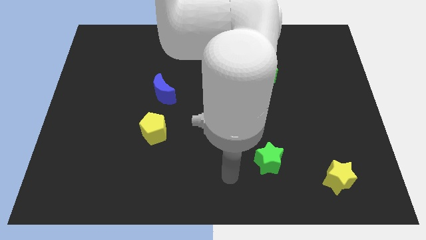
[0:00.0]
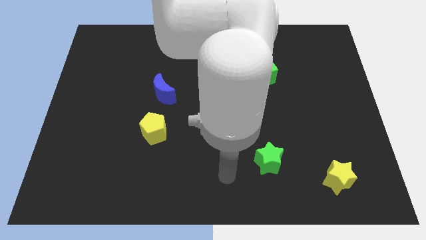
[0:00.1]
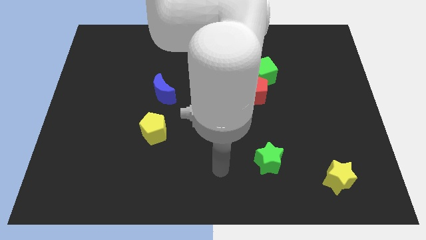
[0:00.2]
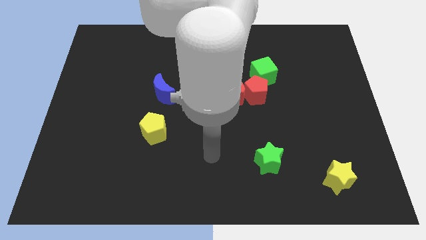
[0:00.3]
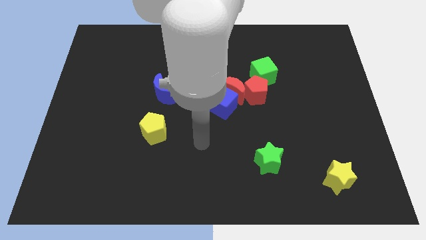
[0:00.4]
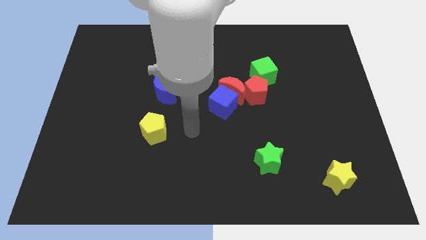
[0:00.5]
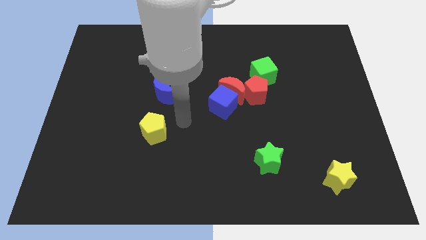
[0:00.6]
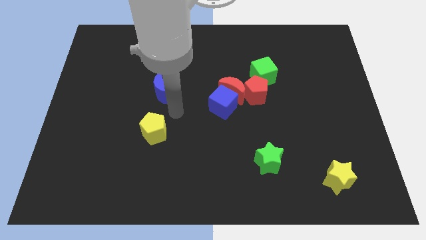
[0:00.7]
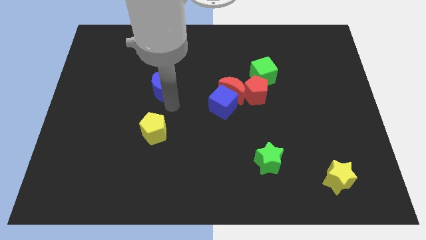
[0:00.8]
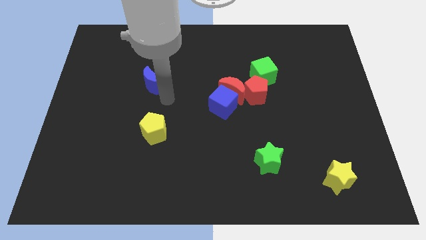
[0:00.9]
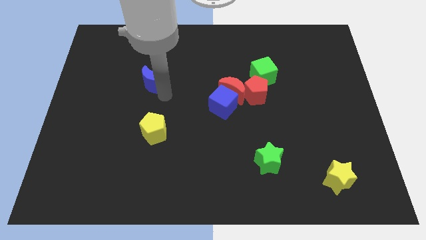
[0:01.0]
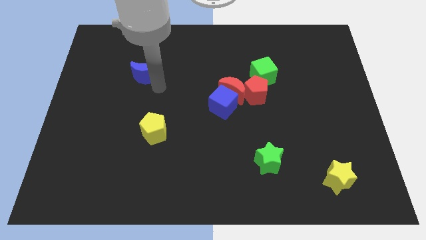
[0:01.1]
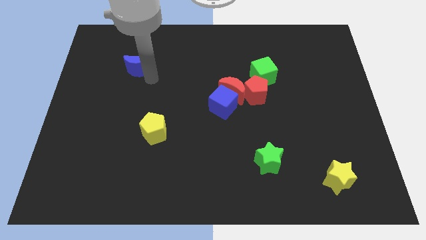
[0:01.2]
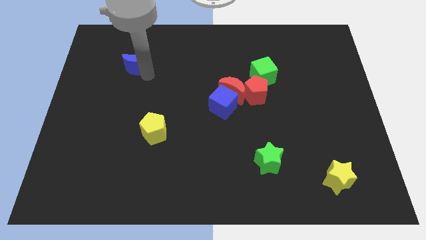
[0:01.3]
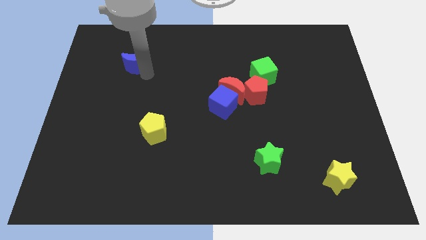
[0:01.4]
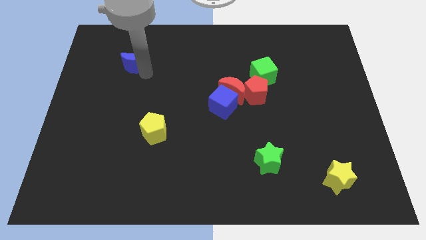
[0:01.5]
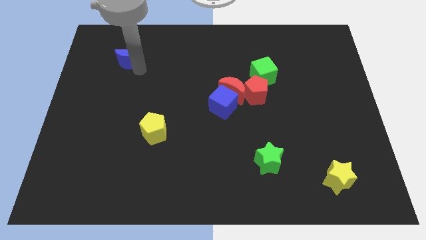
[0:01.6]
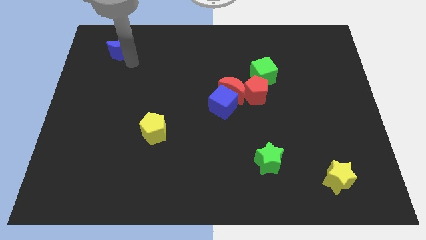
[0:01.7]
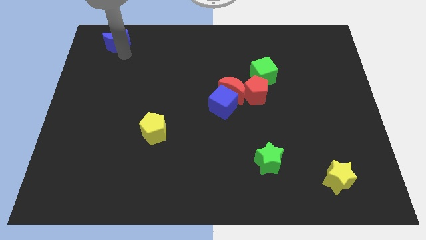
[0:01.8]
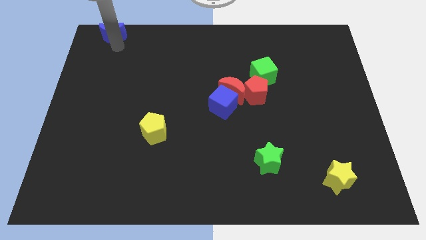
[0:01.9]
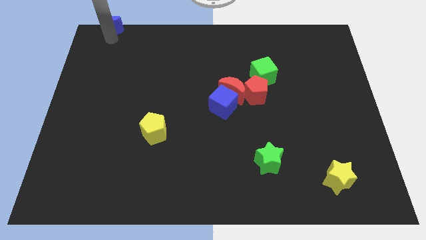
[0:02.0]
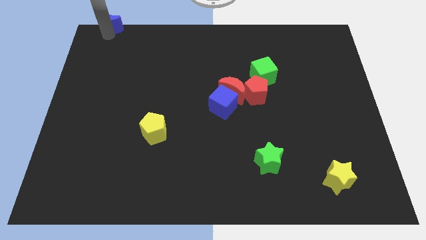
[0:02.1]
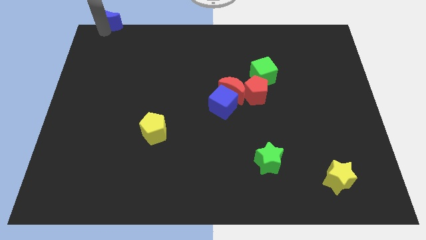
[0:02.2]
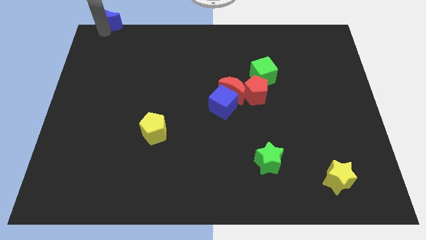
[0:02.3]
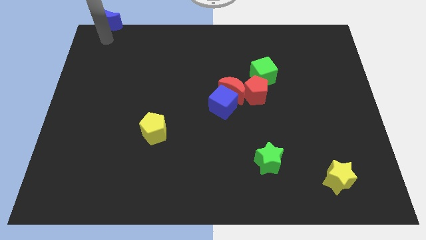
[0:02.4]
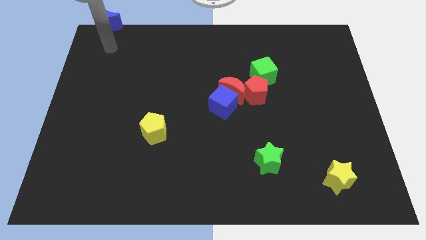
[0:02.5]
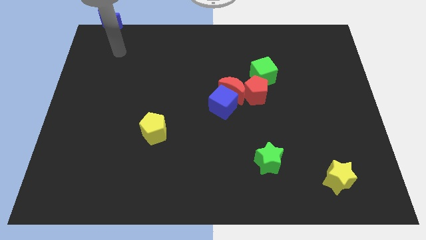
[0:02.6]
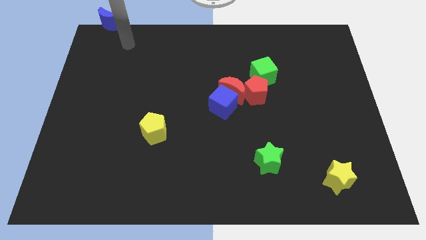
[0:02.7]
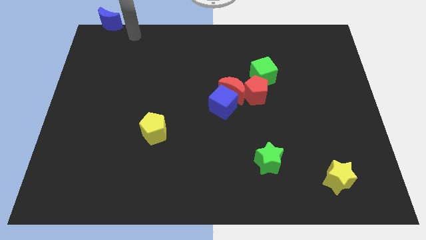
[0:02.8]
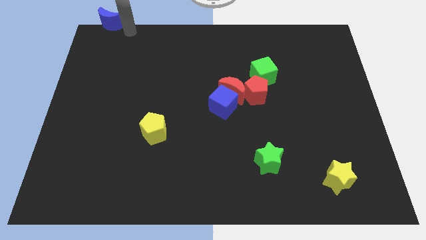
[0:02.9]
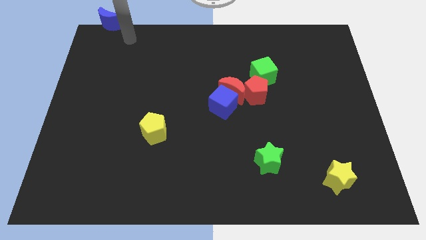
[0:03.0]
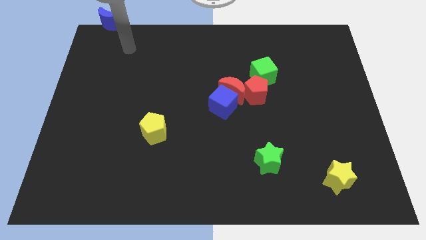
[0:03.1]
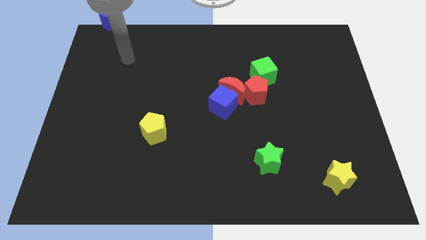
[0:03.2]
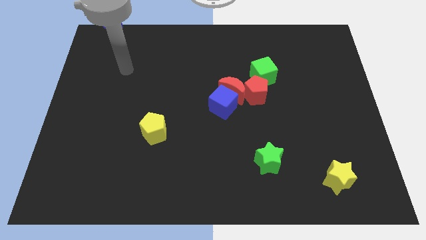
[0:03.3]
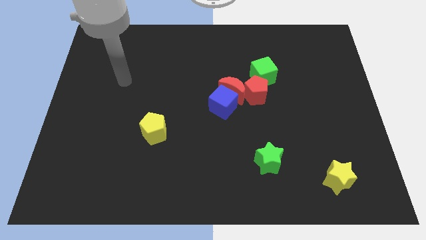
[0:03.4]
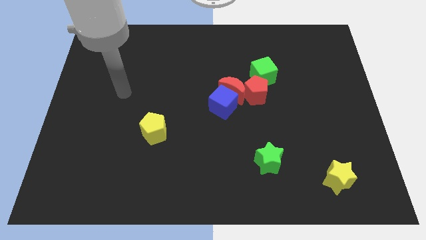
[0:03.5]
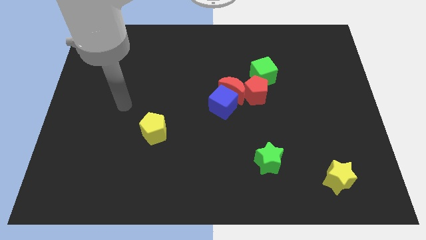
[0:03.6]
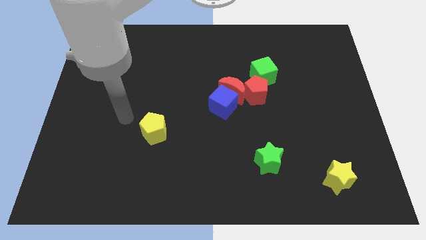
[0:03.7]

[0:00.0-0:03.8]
drag the blue moon into the top left of the board

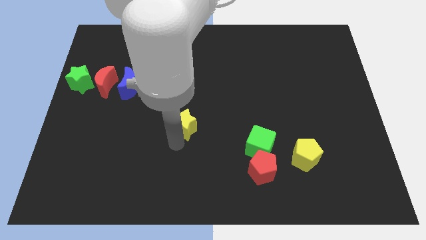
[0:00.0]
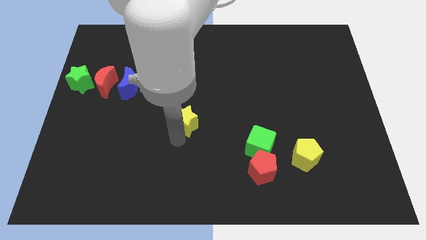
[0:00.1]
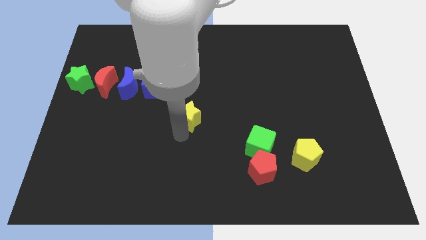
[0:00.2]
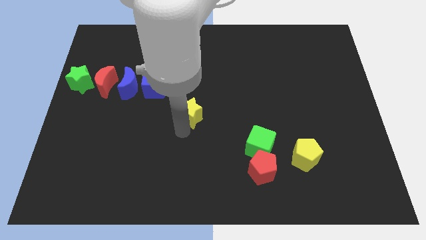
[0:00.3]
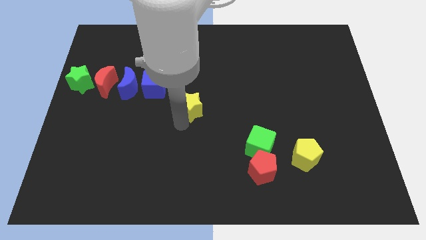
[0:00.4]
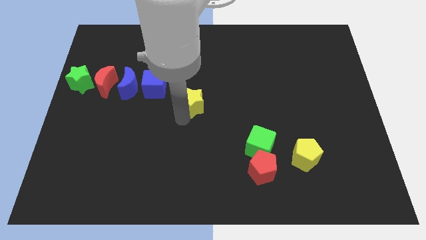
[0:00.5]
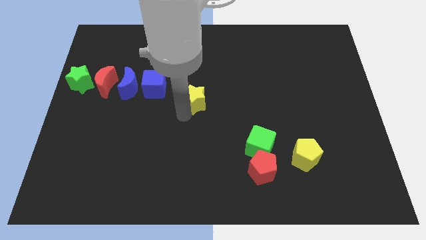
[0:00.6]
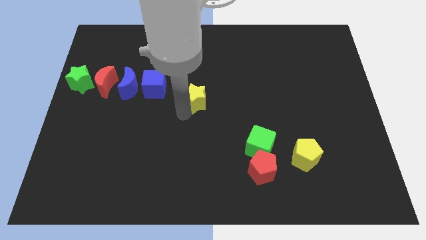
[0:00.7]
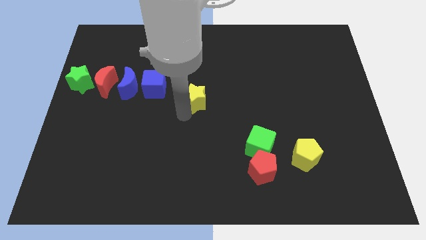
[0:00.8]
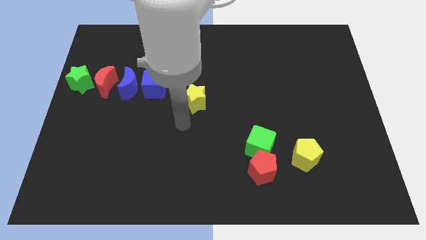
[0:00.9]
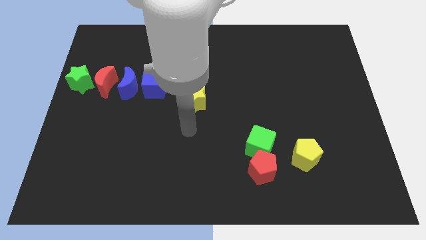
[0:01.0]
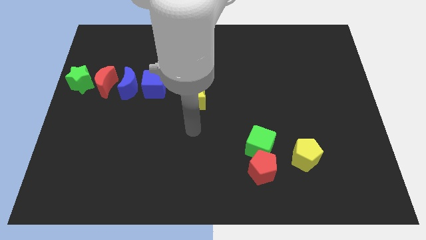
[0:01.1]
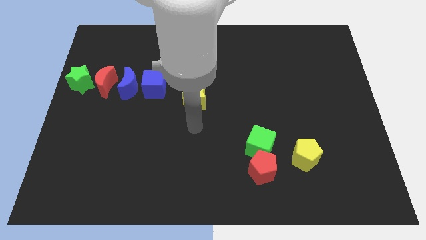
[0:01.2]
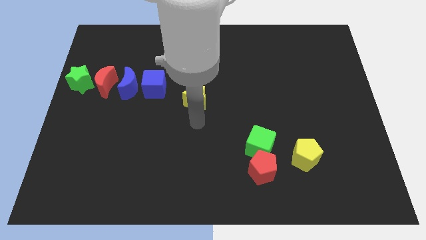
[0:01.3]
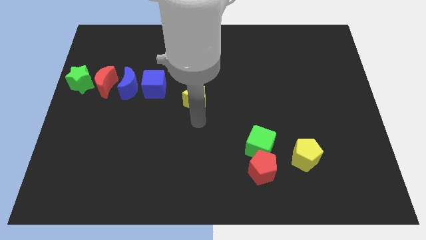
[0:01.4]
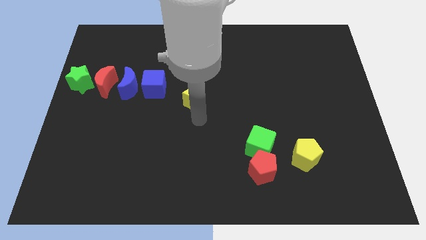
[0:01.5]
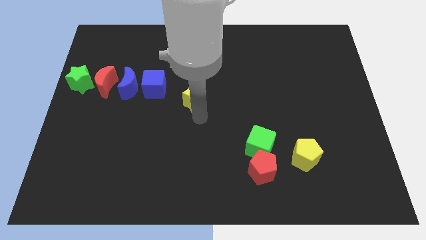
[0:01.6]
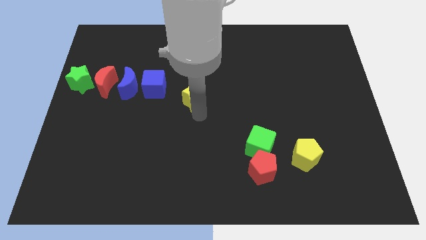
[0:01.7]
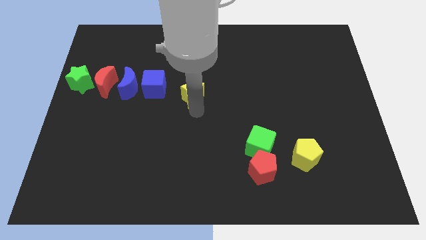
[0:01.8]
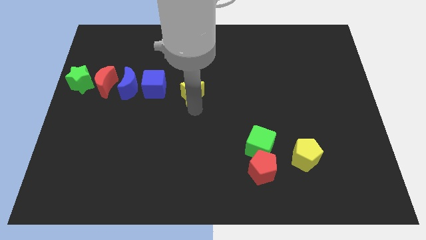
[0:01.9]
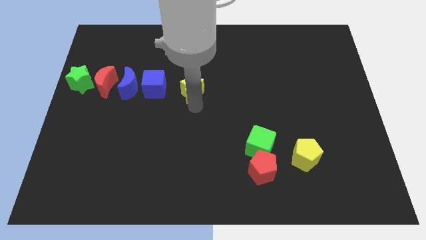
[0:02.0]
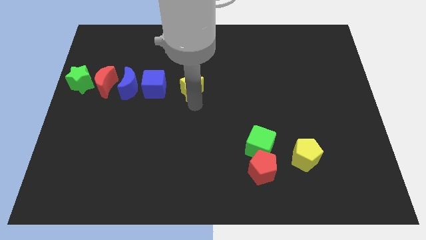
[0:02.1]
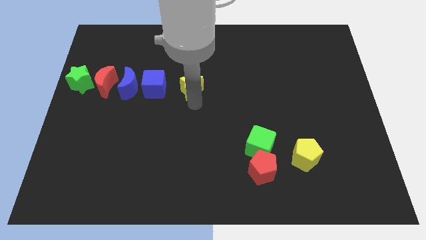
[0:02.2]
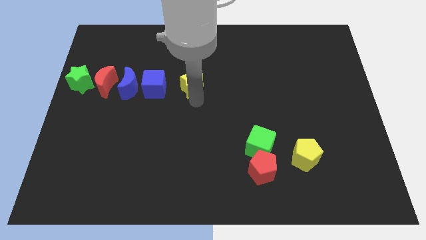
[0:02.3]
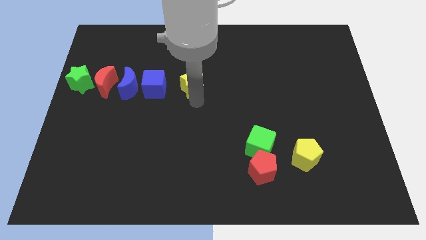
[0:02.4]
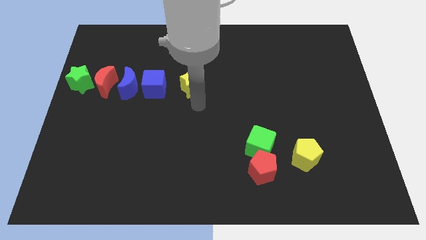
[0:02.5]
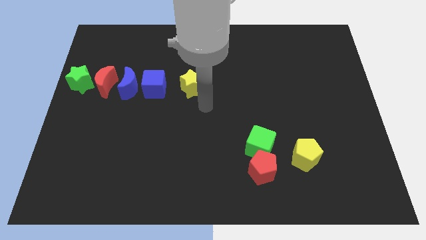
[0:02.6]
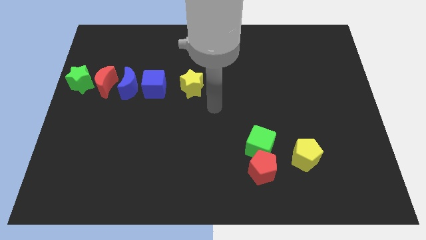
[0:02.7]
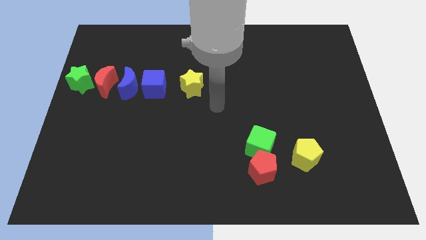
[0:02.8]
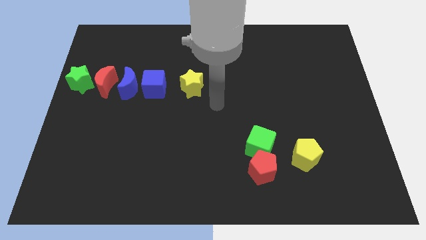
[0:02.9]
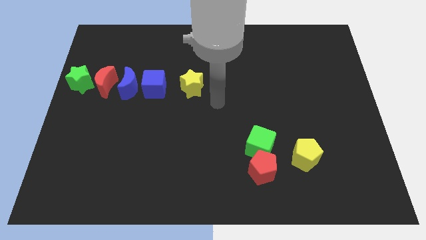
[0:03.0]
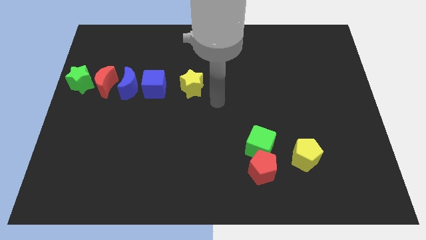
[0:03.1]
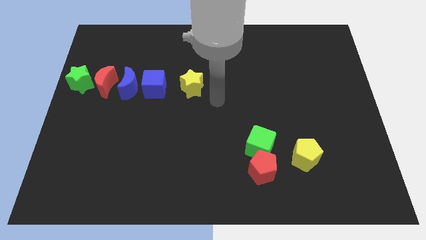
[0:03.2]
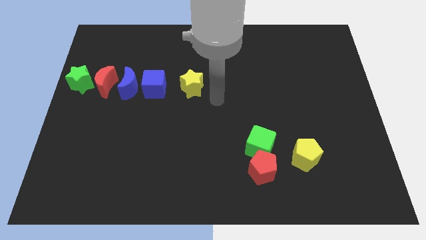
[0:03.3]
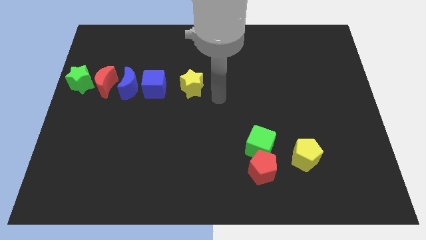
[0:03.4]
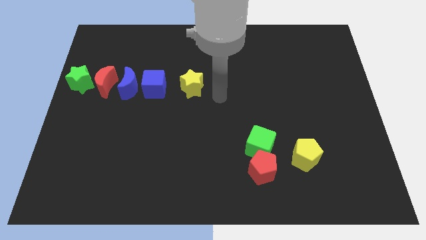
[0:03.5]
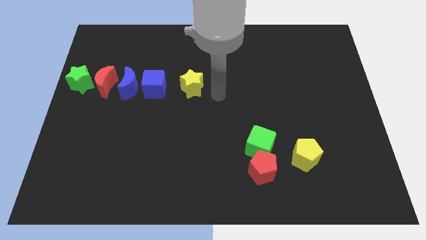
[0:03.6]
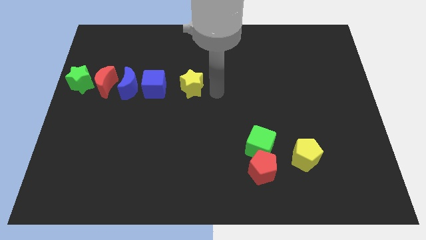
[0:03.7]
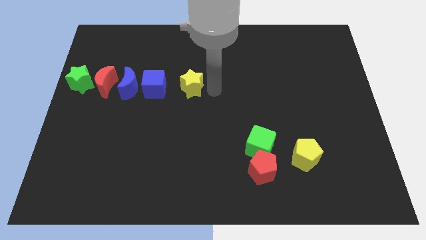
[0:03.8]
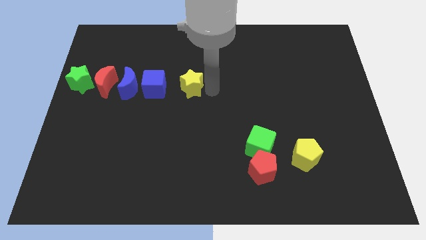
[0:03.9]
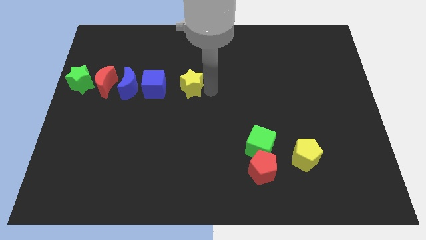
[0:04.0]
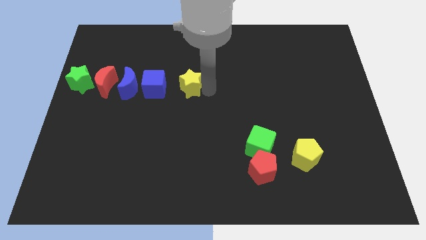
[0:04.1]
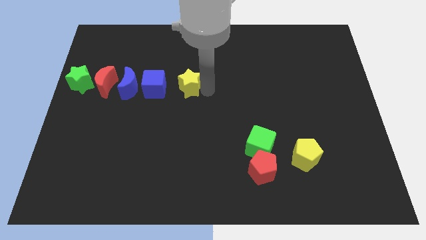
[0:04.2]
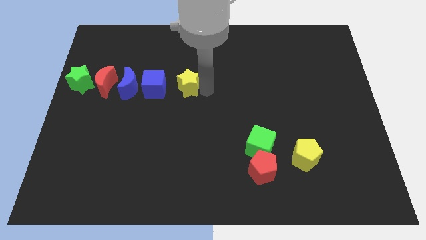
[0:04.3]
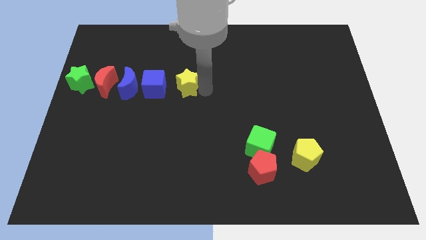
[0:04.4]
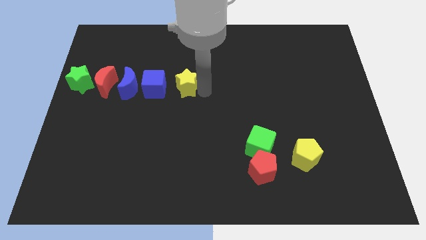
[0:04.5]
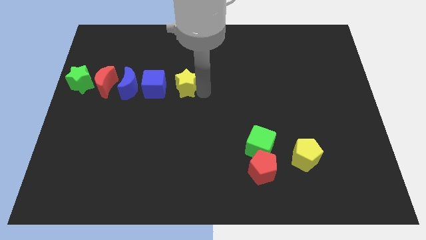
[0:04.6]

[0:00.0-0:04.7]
place yellow star parallel to blue cube

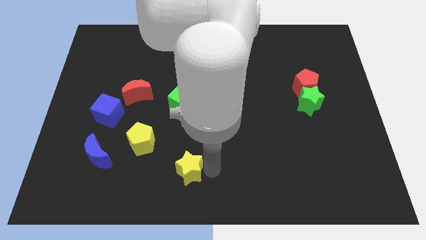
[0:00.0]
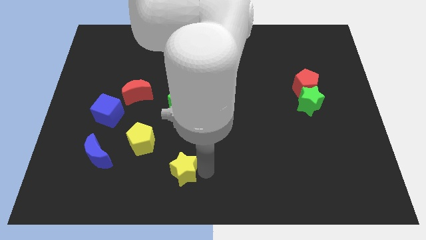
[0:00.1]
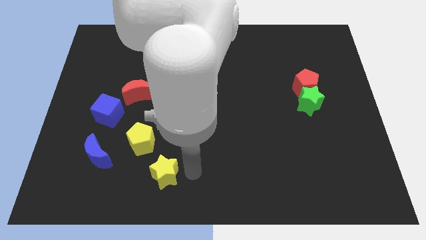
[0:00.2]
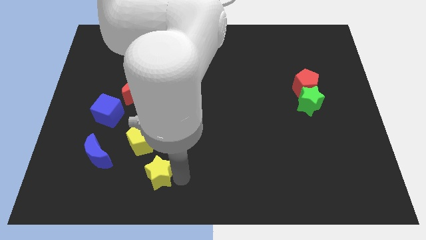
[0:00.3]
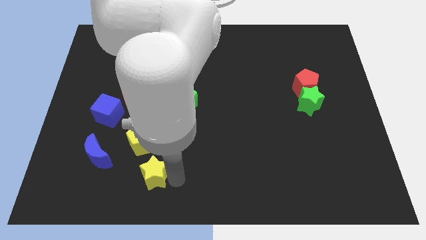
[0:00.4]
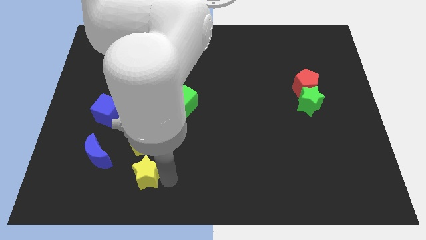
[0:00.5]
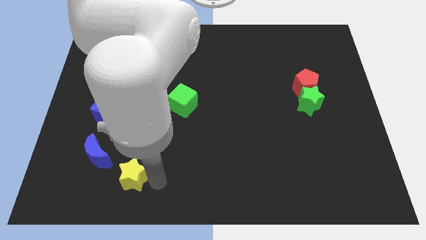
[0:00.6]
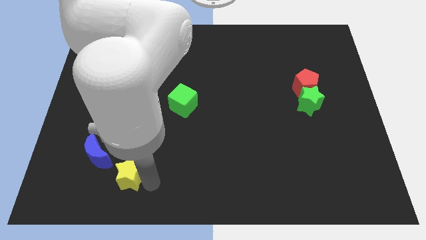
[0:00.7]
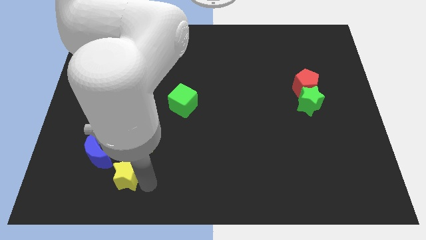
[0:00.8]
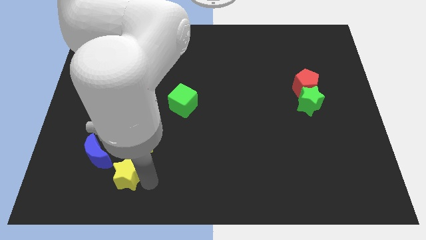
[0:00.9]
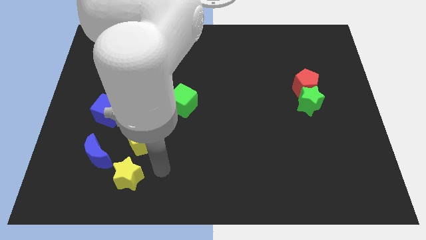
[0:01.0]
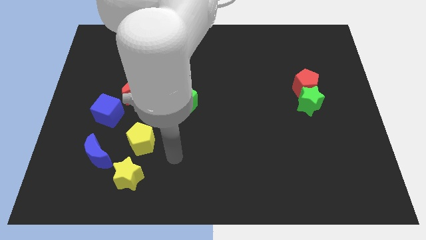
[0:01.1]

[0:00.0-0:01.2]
push yellow star towards left side
